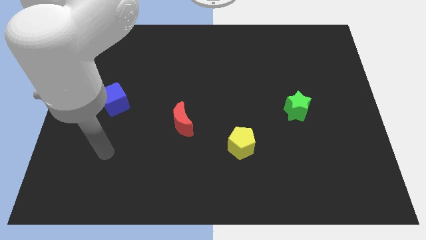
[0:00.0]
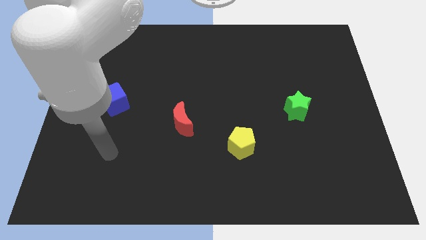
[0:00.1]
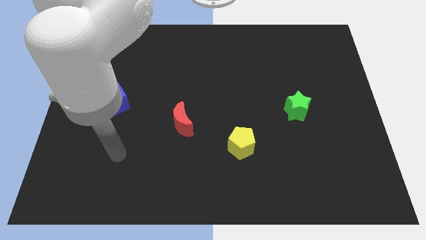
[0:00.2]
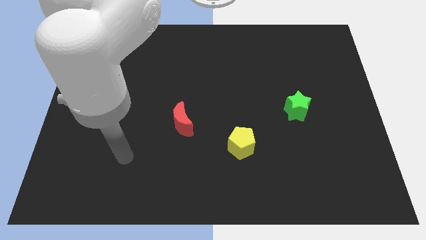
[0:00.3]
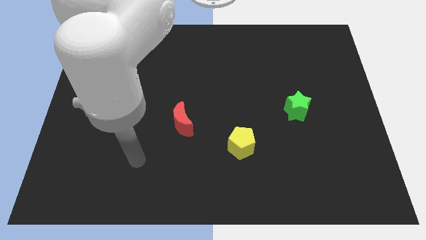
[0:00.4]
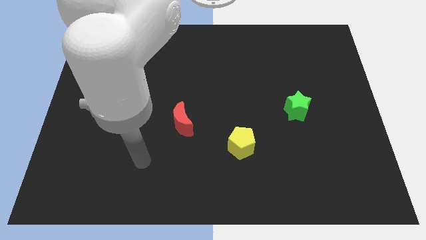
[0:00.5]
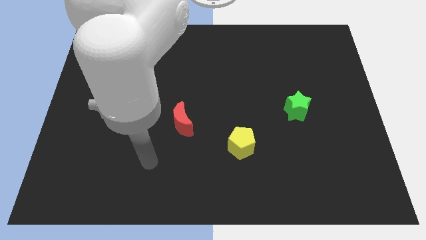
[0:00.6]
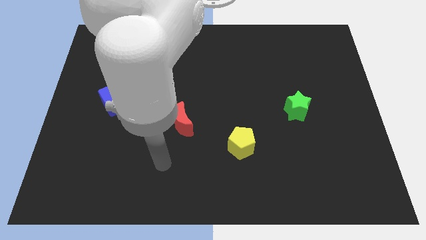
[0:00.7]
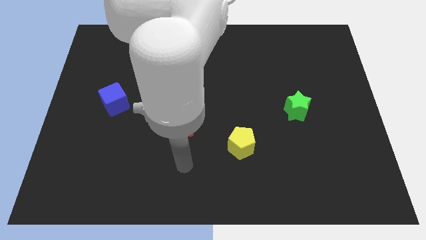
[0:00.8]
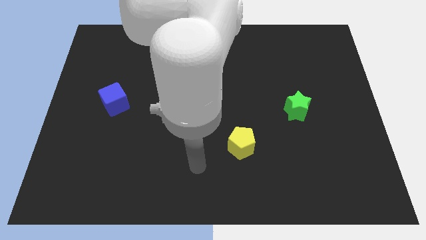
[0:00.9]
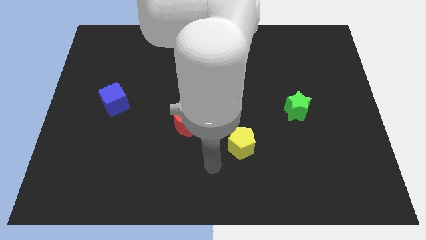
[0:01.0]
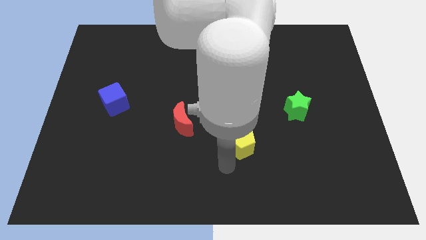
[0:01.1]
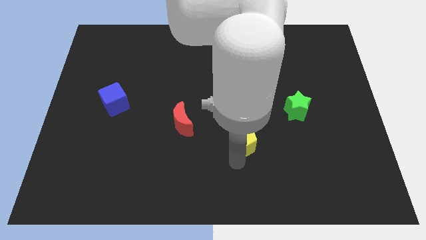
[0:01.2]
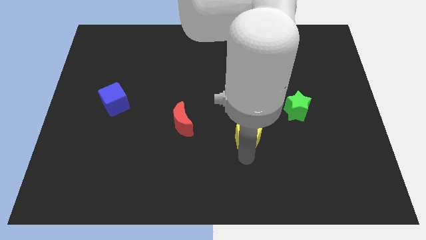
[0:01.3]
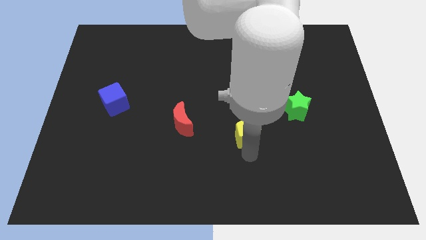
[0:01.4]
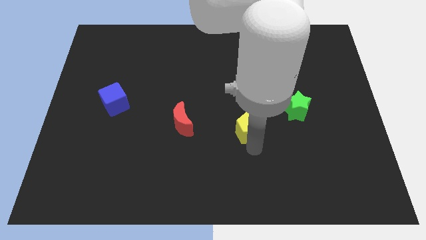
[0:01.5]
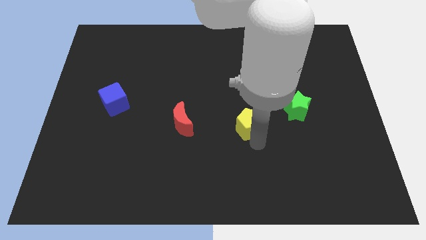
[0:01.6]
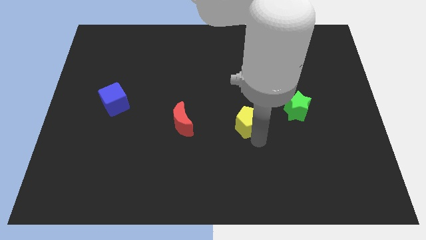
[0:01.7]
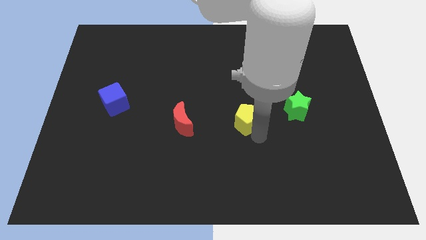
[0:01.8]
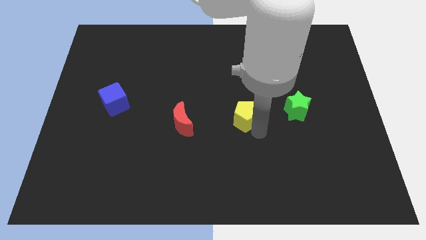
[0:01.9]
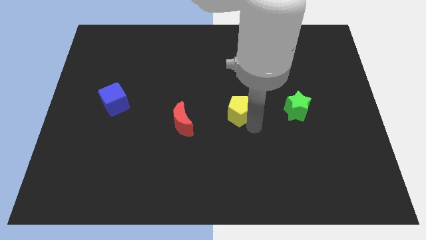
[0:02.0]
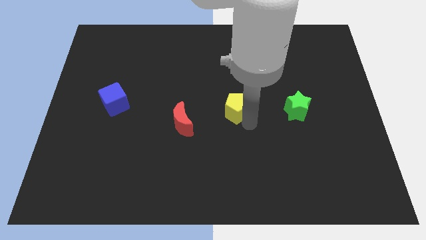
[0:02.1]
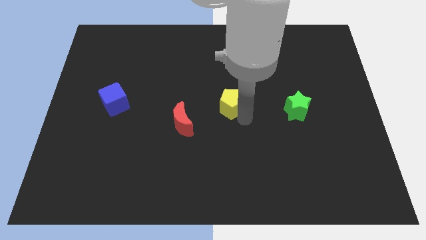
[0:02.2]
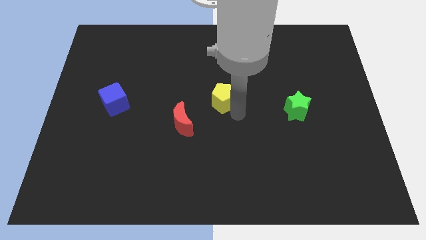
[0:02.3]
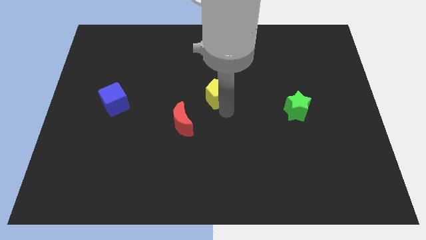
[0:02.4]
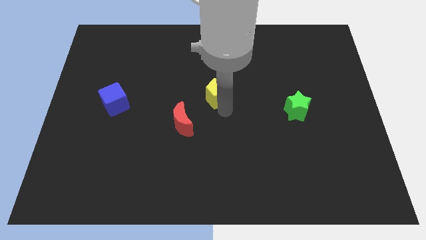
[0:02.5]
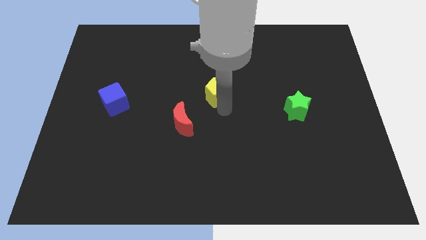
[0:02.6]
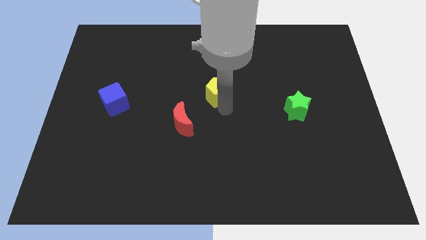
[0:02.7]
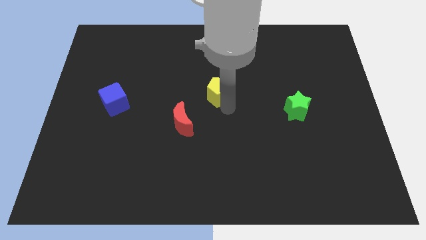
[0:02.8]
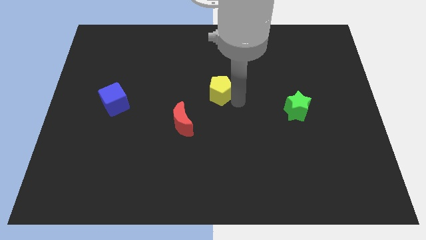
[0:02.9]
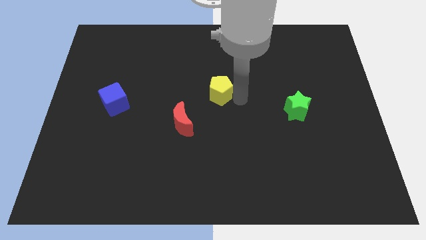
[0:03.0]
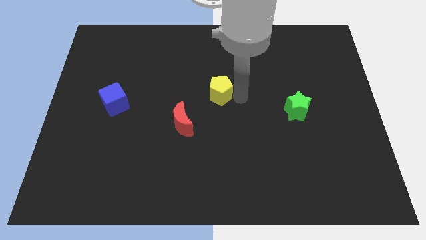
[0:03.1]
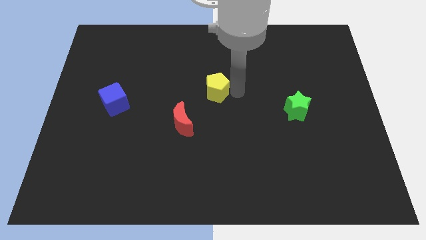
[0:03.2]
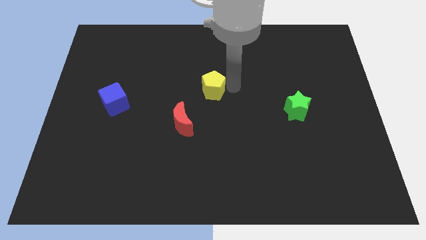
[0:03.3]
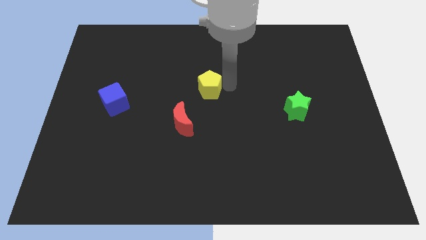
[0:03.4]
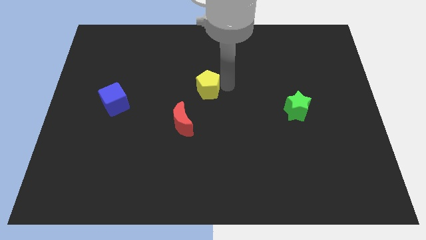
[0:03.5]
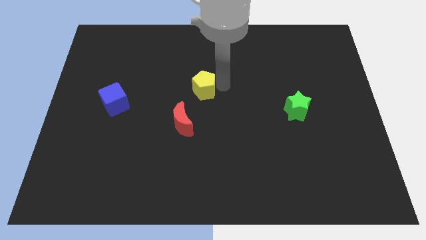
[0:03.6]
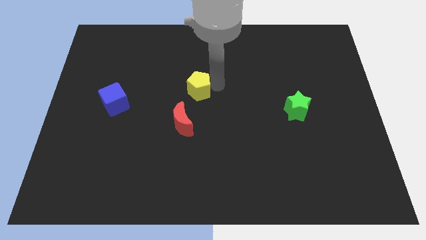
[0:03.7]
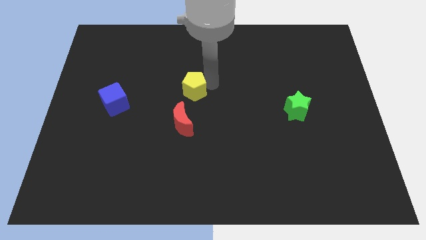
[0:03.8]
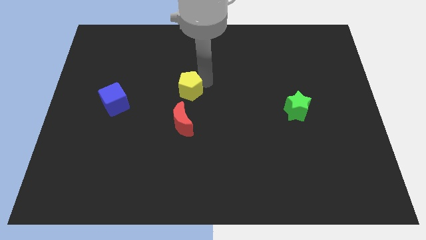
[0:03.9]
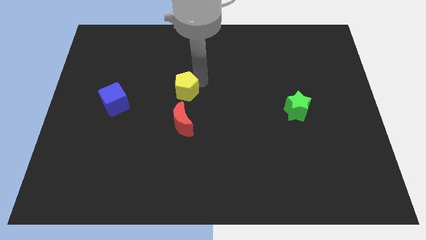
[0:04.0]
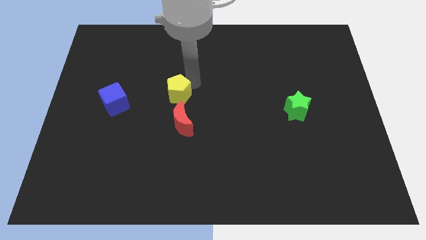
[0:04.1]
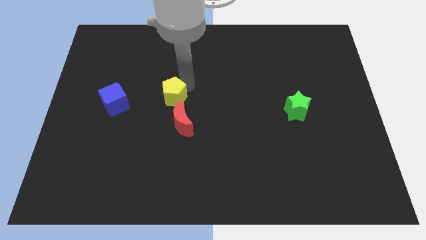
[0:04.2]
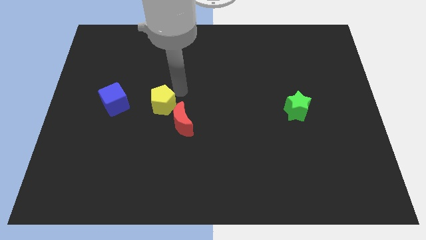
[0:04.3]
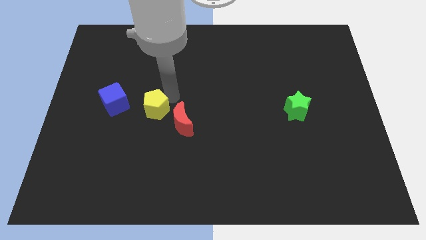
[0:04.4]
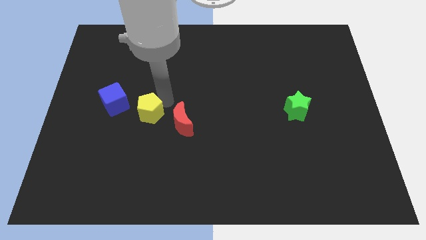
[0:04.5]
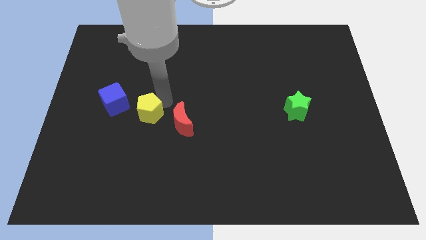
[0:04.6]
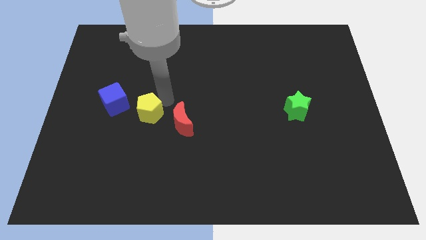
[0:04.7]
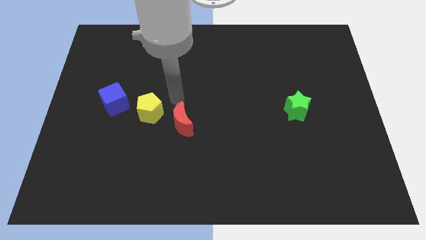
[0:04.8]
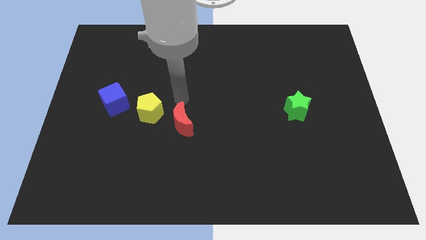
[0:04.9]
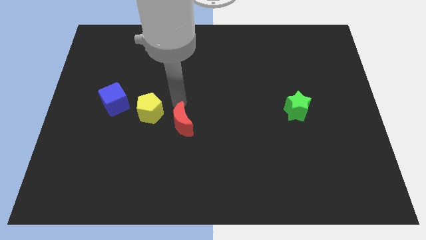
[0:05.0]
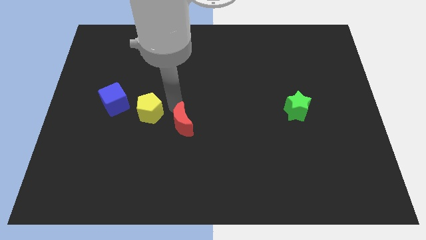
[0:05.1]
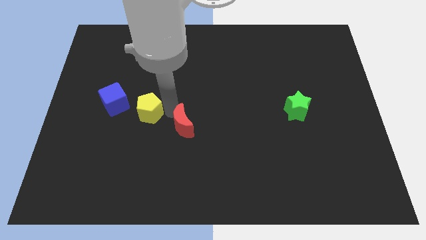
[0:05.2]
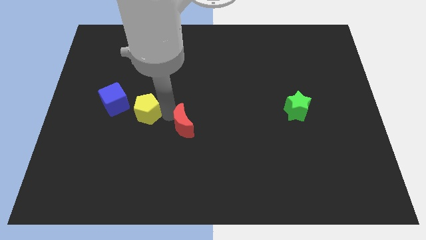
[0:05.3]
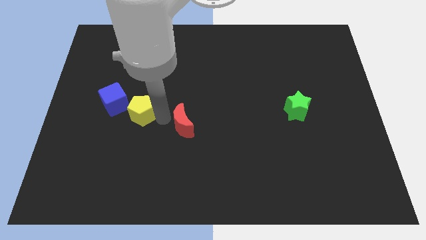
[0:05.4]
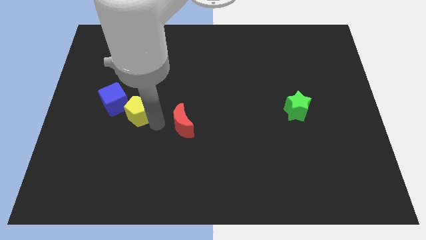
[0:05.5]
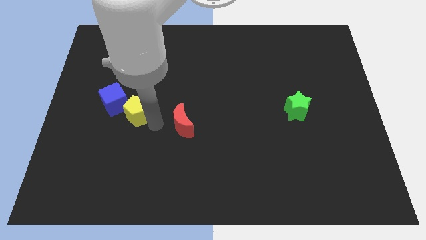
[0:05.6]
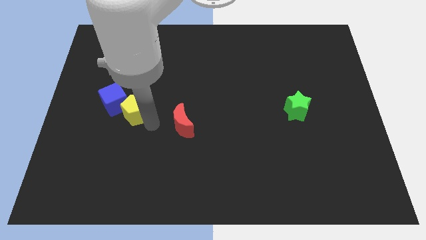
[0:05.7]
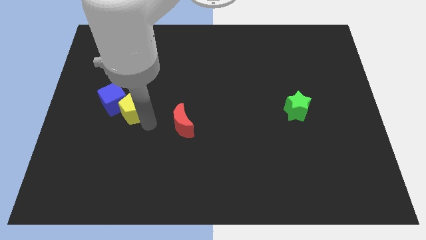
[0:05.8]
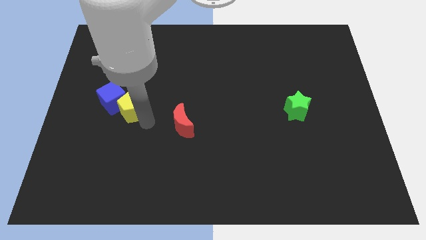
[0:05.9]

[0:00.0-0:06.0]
put the yellow block close to the blue cube

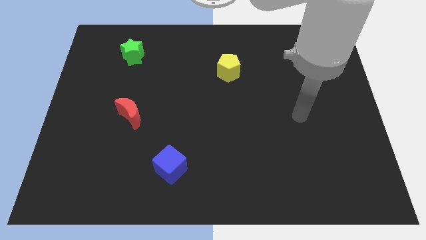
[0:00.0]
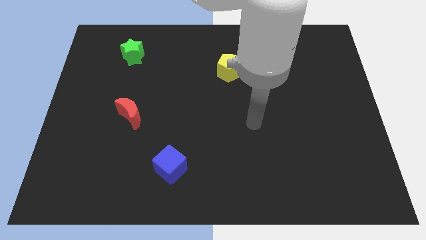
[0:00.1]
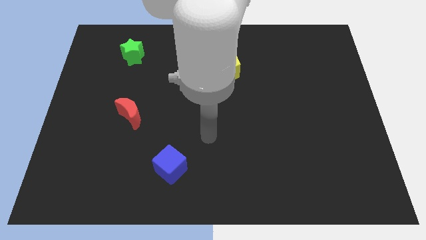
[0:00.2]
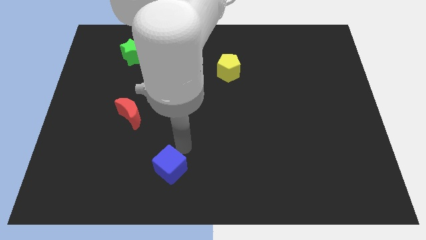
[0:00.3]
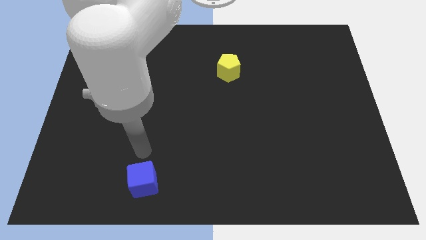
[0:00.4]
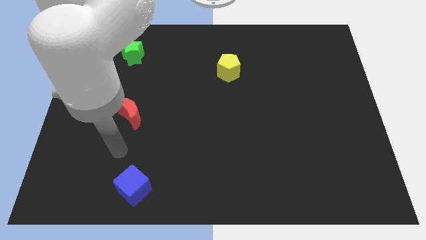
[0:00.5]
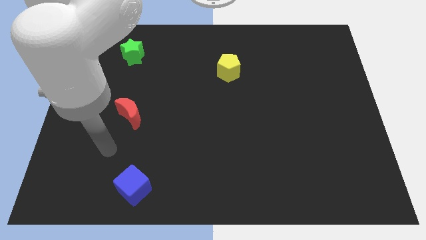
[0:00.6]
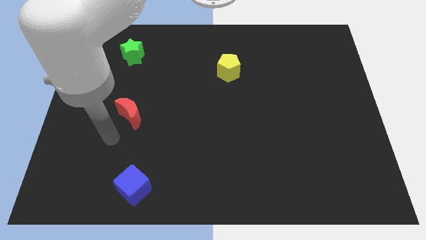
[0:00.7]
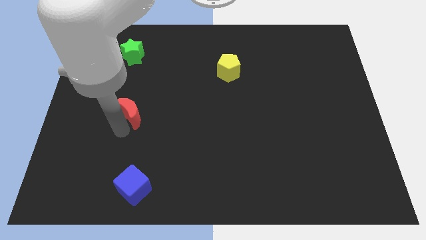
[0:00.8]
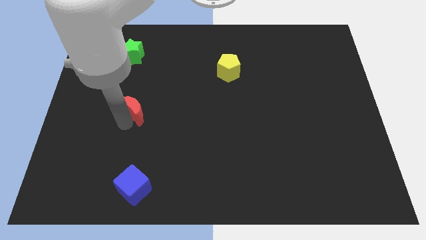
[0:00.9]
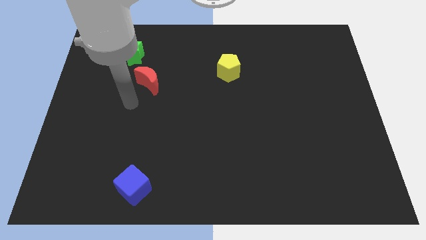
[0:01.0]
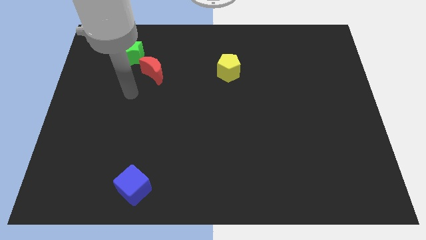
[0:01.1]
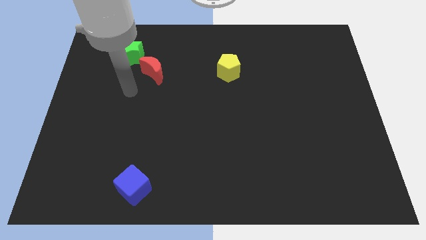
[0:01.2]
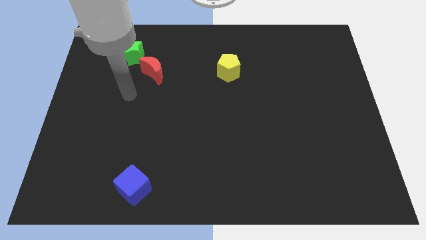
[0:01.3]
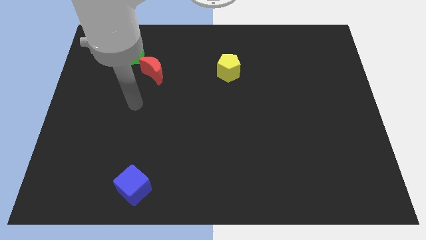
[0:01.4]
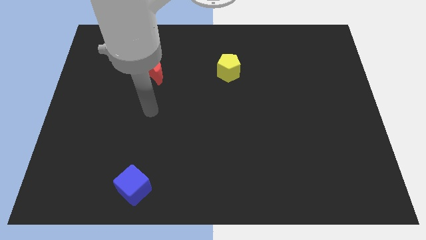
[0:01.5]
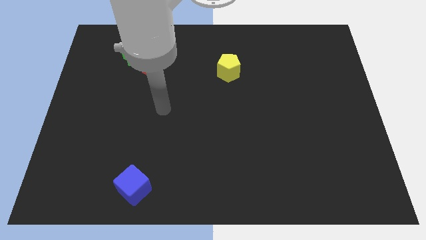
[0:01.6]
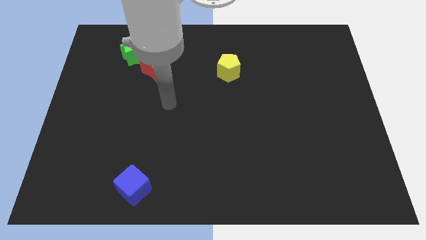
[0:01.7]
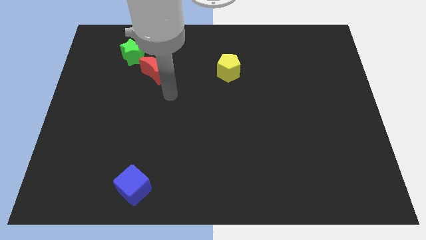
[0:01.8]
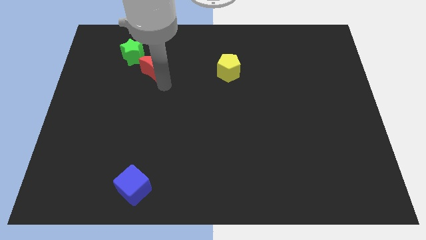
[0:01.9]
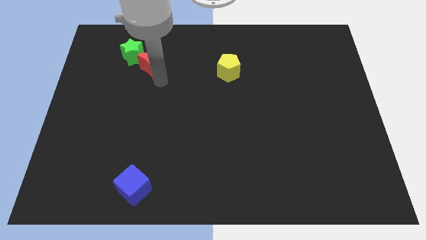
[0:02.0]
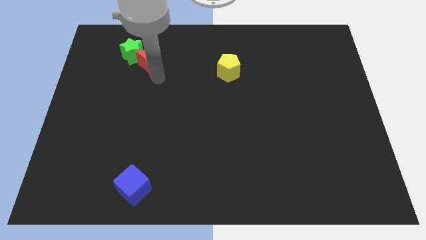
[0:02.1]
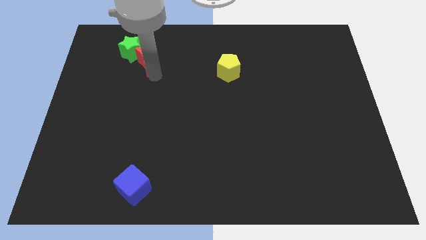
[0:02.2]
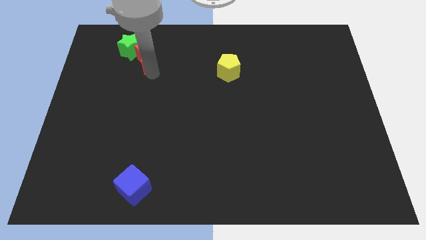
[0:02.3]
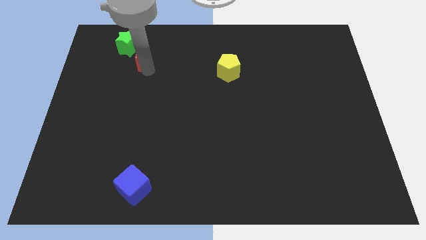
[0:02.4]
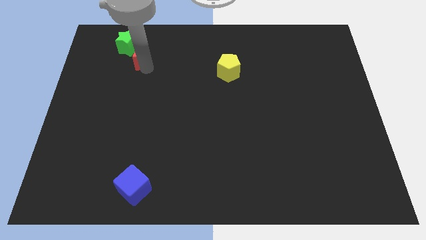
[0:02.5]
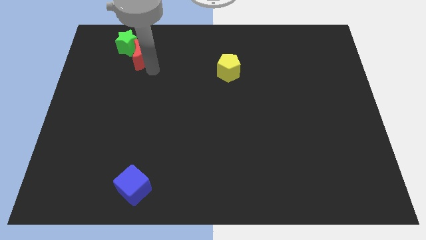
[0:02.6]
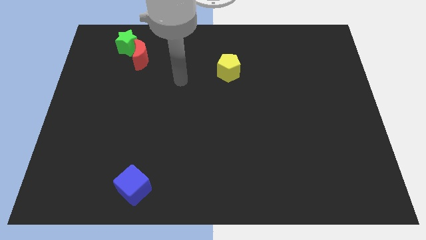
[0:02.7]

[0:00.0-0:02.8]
push the red moon next to the green star
